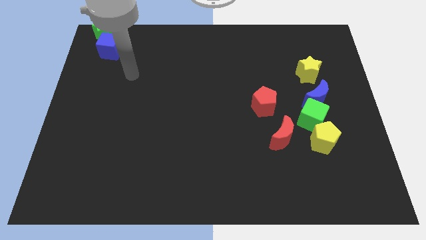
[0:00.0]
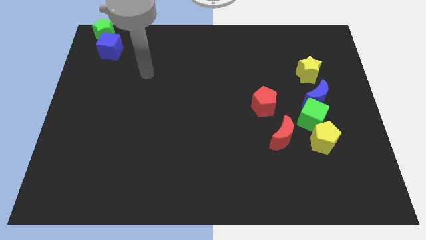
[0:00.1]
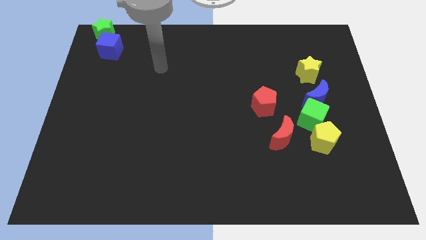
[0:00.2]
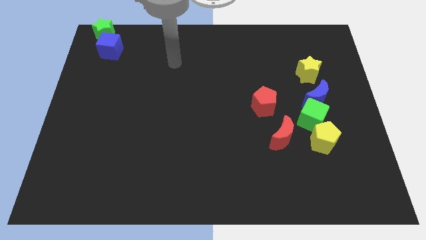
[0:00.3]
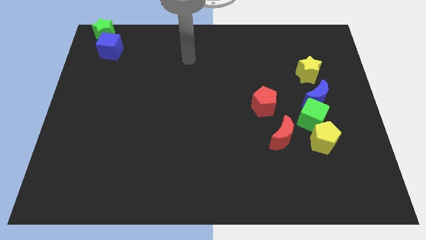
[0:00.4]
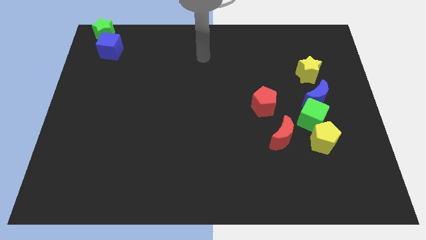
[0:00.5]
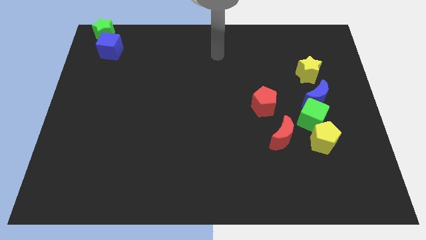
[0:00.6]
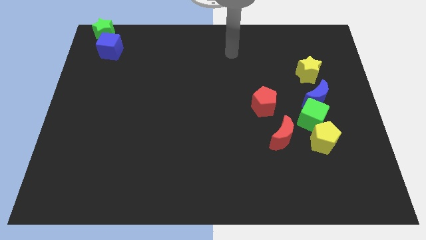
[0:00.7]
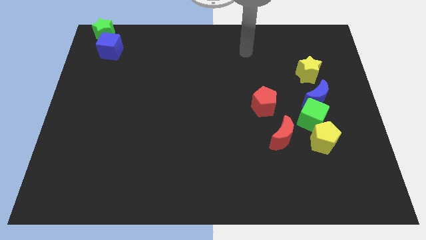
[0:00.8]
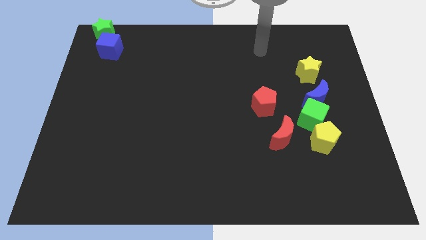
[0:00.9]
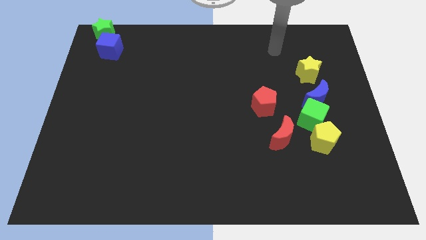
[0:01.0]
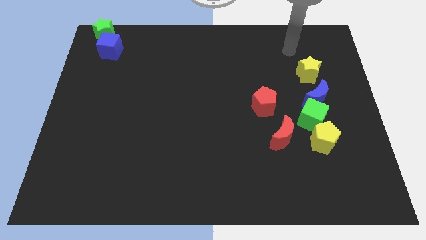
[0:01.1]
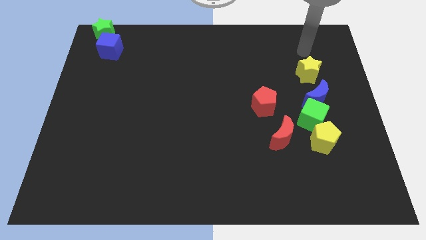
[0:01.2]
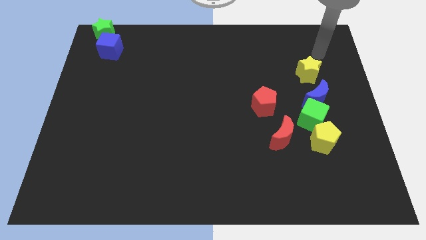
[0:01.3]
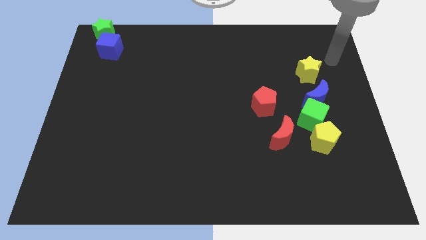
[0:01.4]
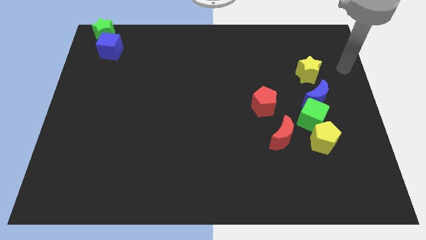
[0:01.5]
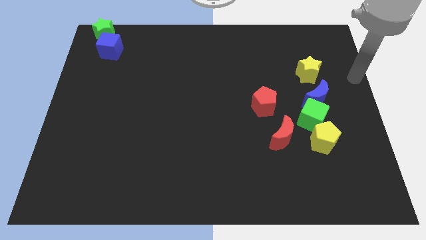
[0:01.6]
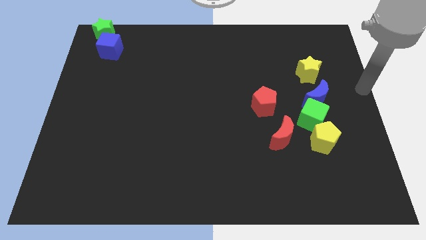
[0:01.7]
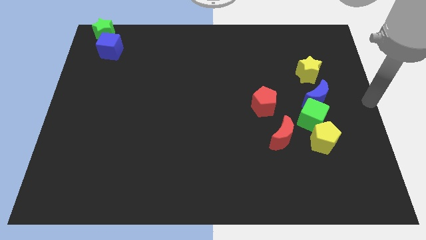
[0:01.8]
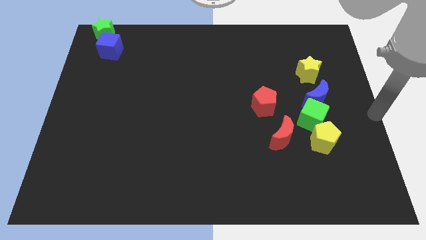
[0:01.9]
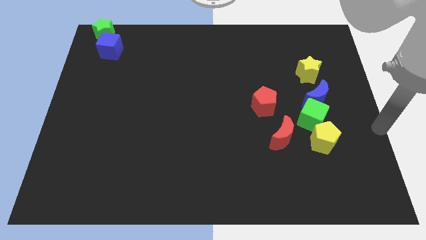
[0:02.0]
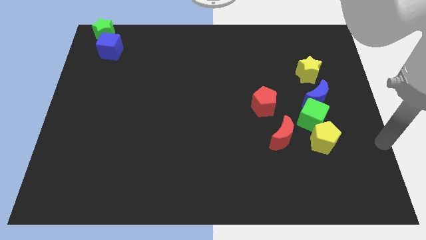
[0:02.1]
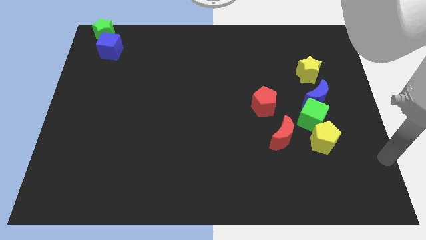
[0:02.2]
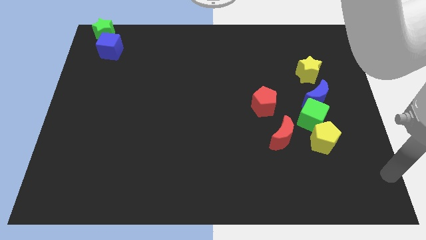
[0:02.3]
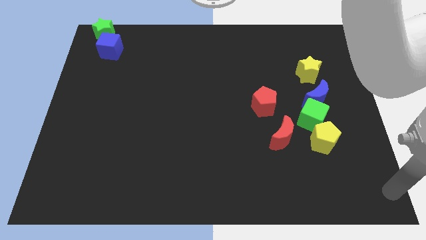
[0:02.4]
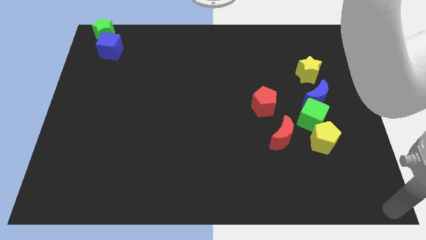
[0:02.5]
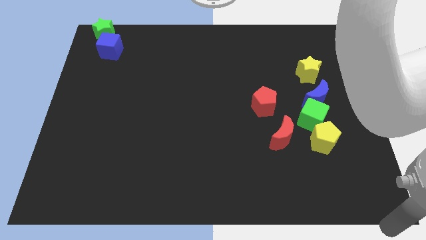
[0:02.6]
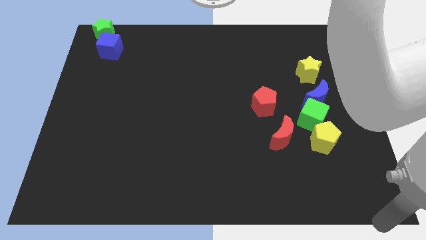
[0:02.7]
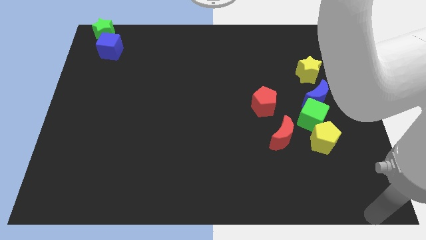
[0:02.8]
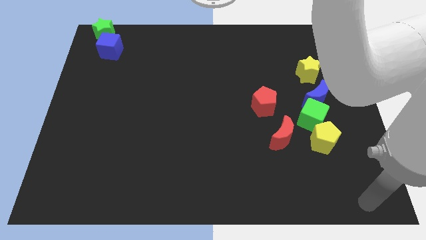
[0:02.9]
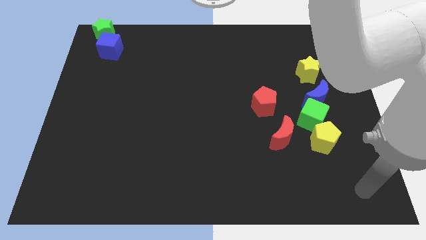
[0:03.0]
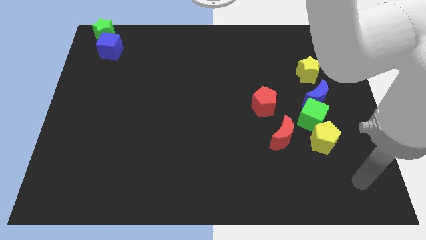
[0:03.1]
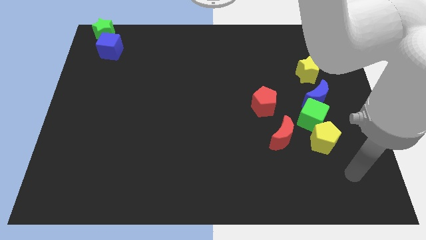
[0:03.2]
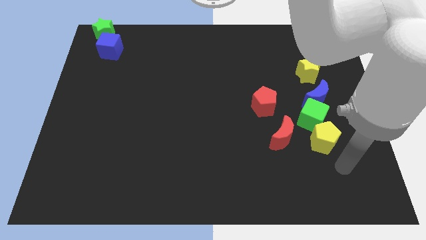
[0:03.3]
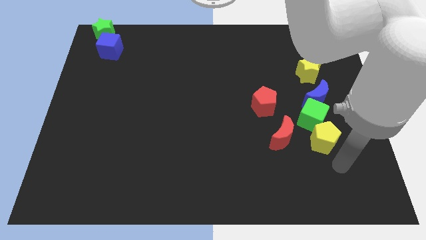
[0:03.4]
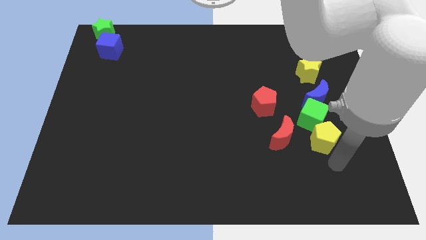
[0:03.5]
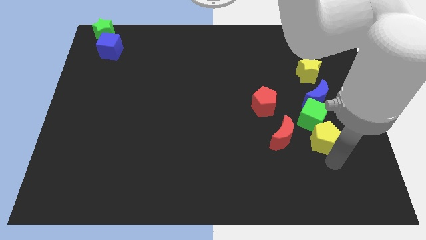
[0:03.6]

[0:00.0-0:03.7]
place the arm down to the yellow pentagon

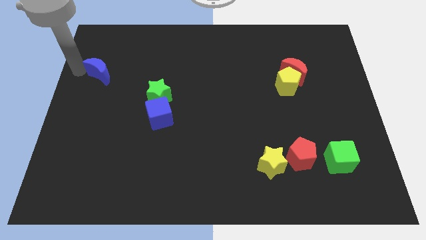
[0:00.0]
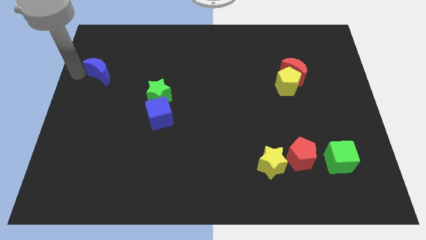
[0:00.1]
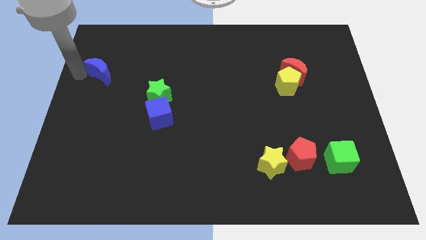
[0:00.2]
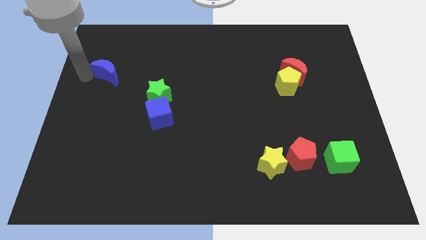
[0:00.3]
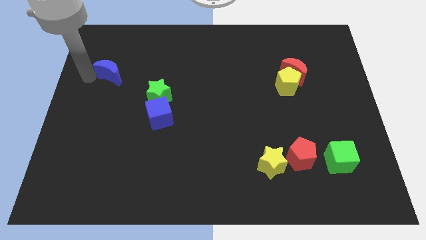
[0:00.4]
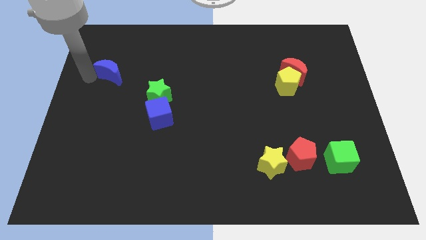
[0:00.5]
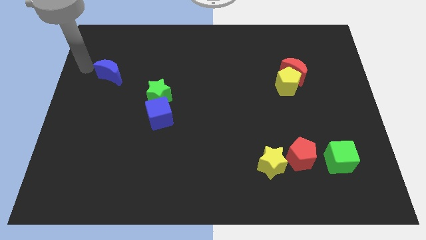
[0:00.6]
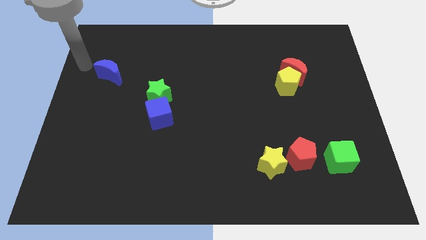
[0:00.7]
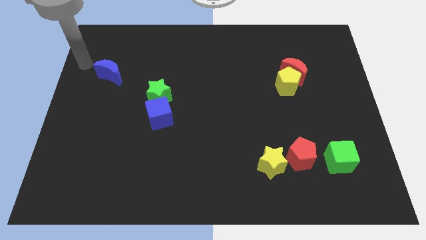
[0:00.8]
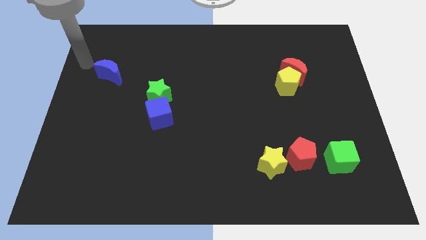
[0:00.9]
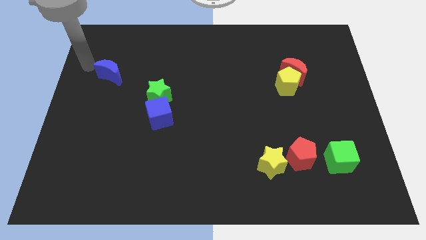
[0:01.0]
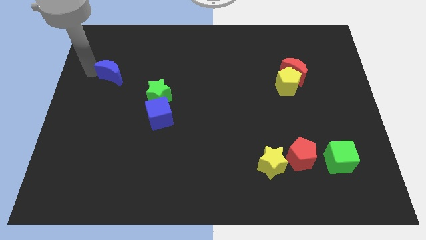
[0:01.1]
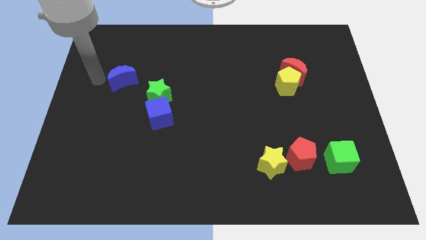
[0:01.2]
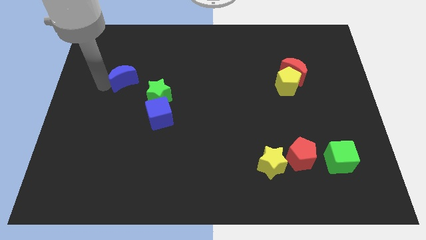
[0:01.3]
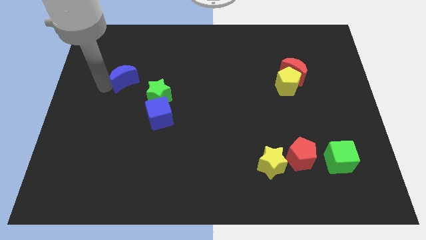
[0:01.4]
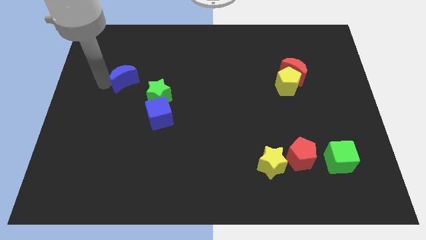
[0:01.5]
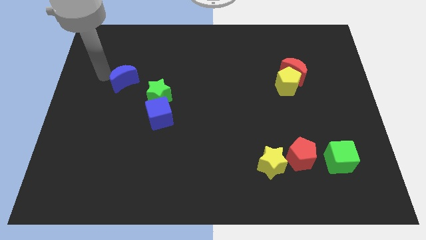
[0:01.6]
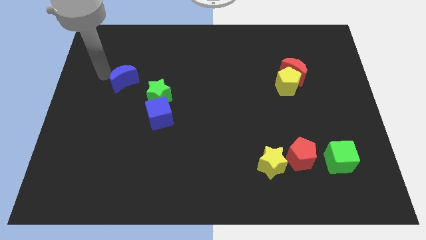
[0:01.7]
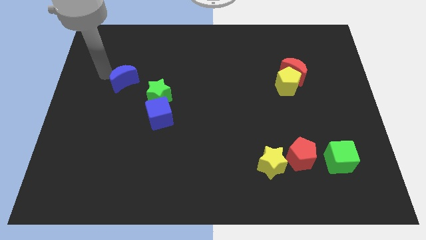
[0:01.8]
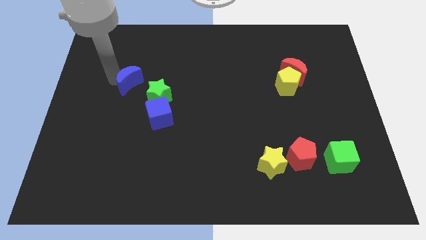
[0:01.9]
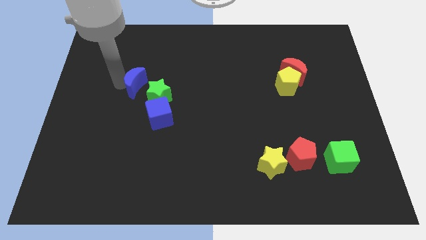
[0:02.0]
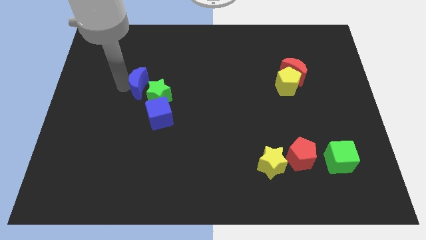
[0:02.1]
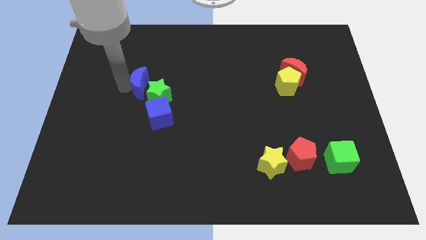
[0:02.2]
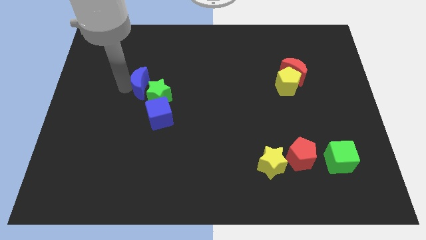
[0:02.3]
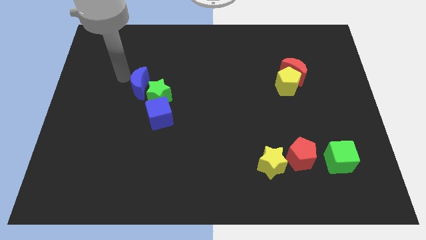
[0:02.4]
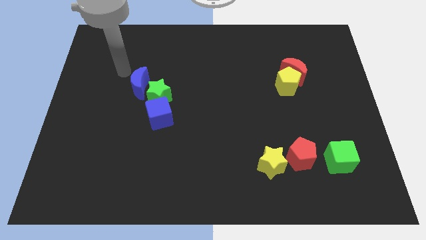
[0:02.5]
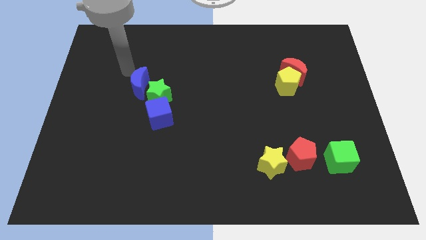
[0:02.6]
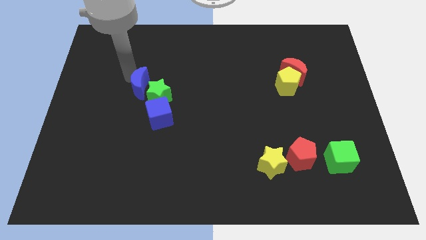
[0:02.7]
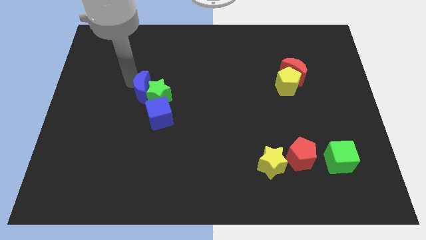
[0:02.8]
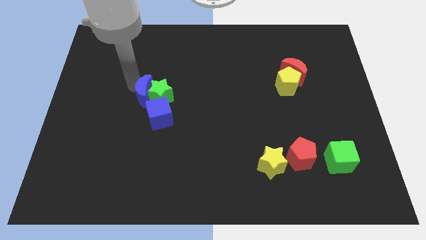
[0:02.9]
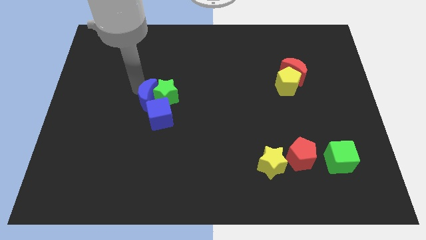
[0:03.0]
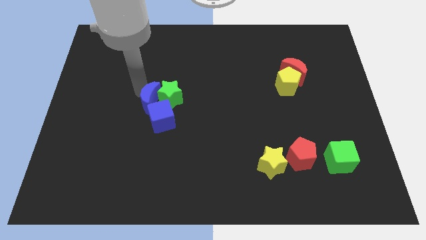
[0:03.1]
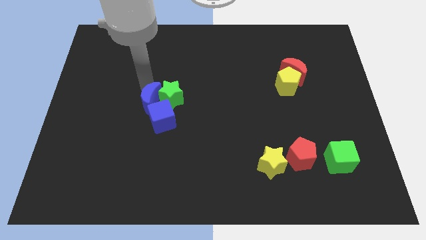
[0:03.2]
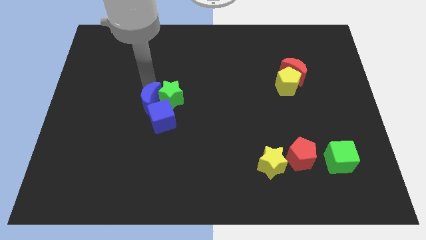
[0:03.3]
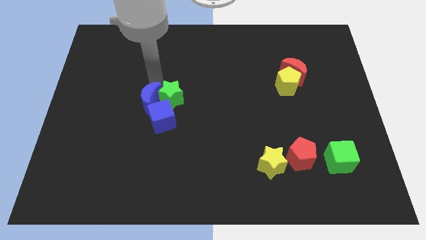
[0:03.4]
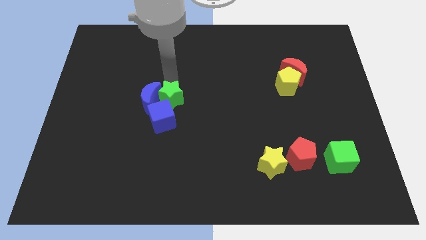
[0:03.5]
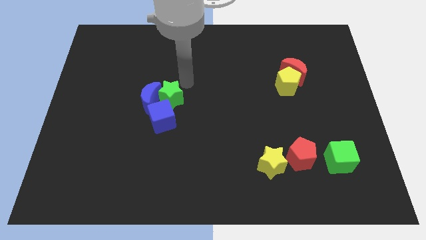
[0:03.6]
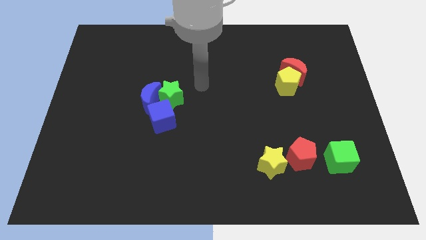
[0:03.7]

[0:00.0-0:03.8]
move the blue crescent into the green star

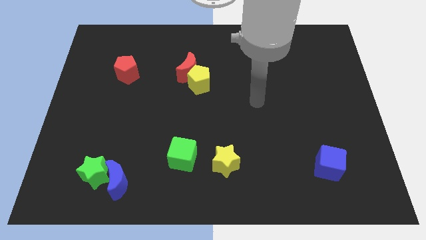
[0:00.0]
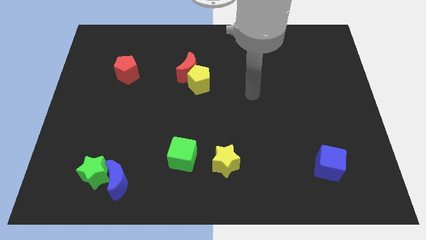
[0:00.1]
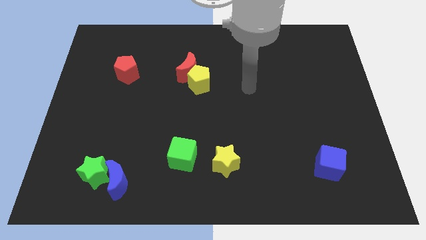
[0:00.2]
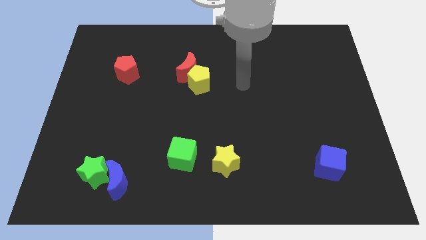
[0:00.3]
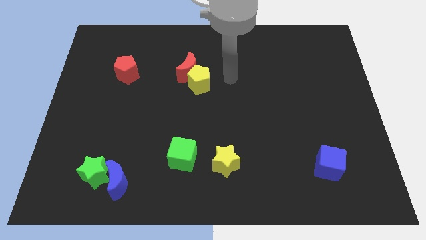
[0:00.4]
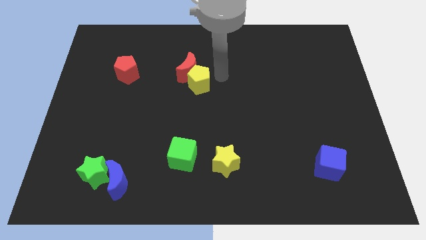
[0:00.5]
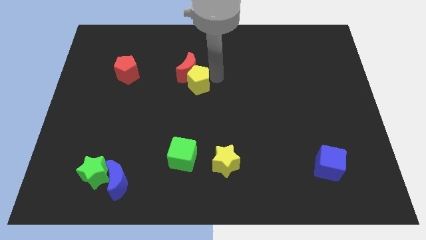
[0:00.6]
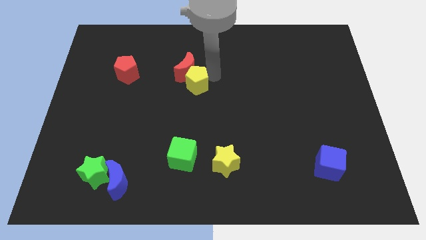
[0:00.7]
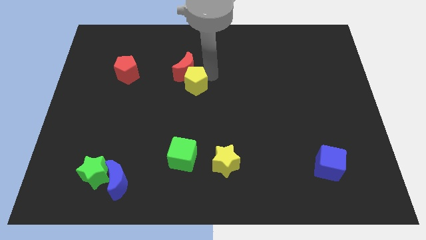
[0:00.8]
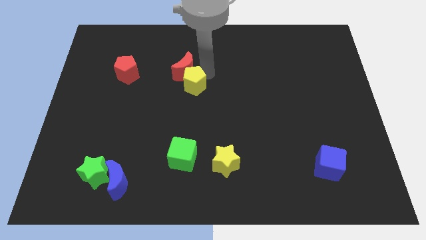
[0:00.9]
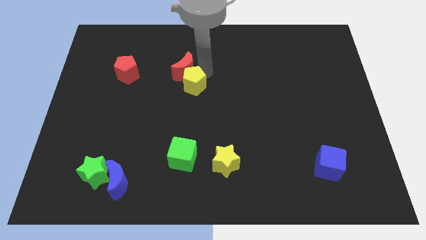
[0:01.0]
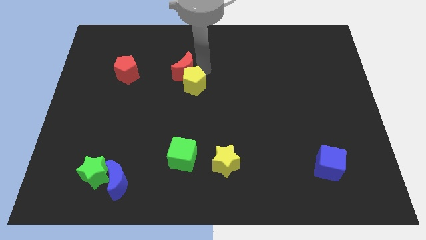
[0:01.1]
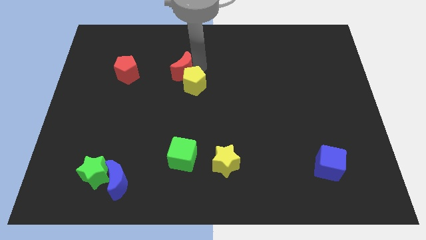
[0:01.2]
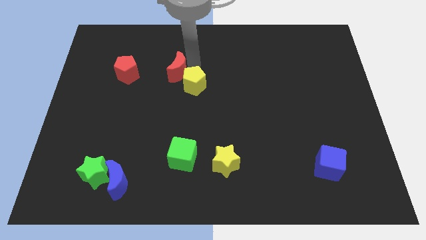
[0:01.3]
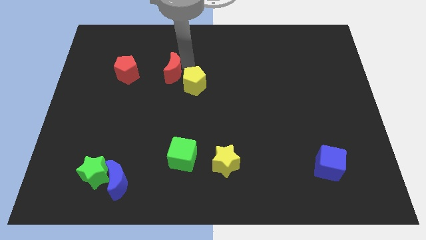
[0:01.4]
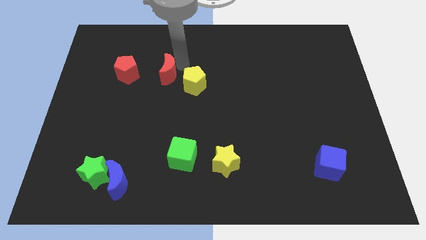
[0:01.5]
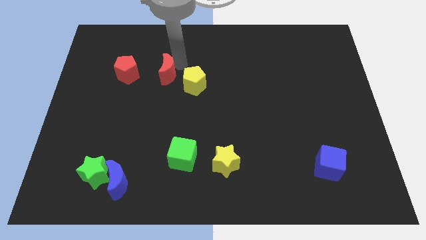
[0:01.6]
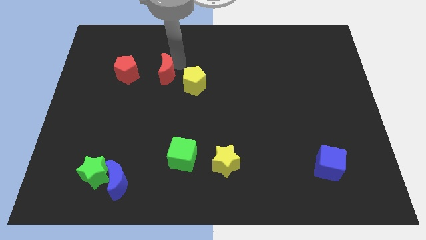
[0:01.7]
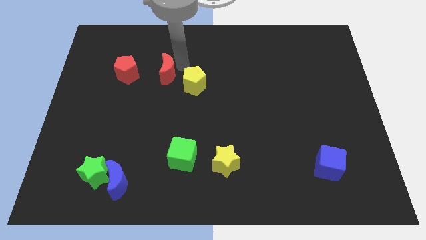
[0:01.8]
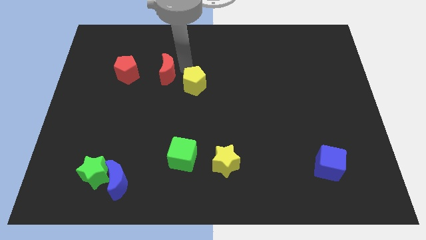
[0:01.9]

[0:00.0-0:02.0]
separate the red crescent from the yellow pentagon
